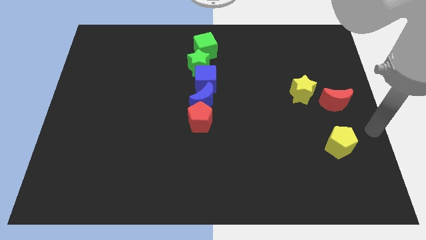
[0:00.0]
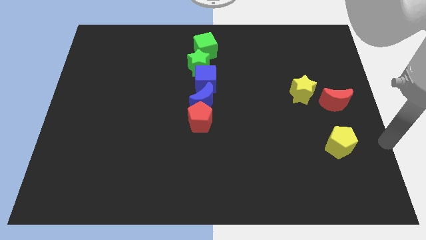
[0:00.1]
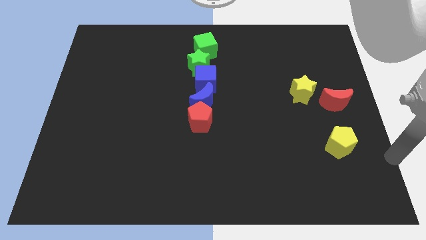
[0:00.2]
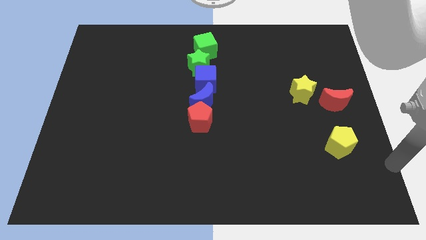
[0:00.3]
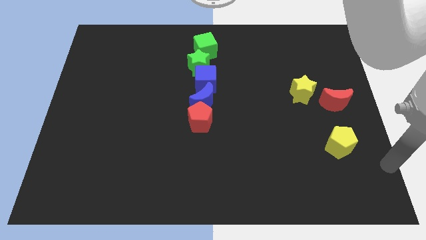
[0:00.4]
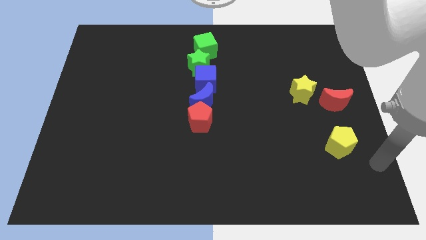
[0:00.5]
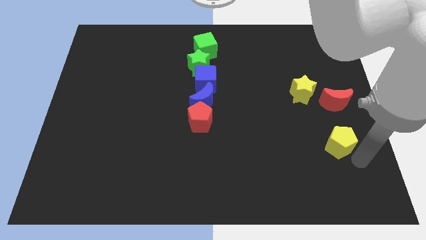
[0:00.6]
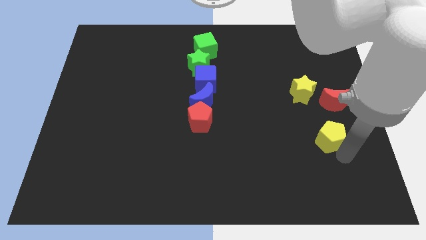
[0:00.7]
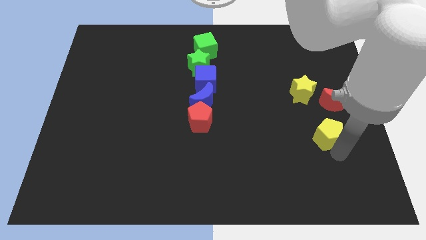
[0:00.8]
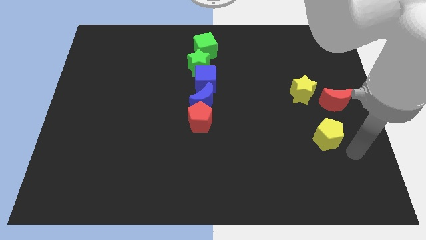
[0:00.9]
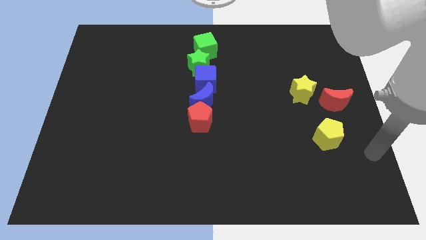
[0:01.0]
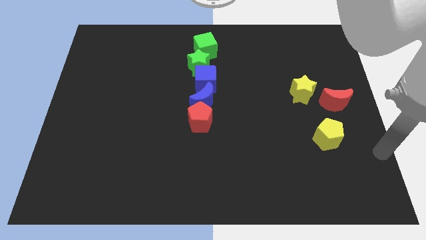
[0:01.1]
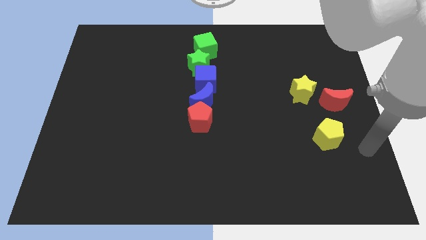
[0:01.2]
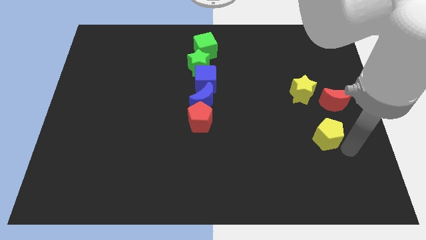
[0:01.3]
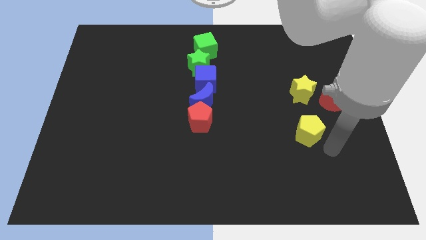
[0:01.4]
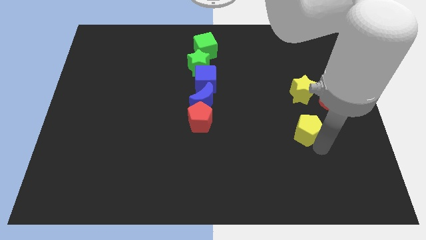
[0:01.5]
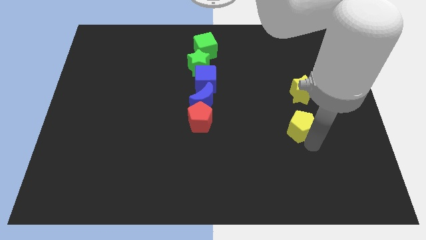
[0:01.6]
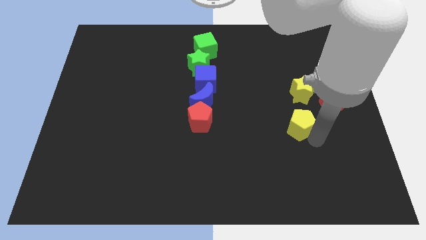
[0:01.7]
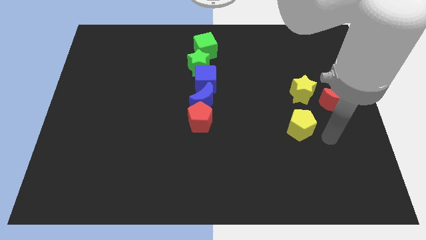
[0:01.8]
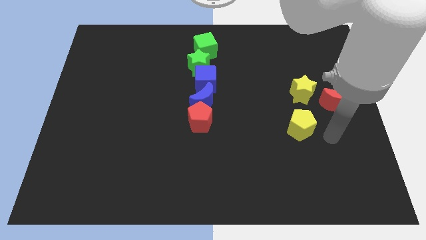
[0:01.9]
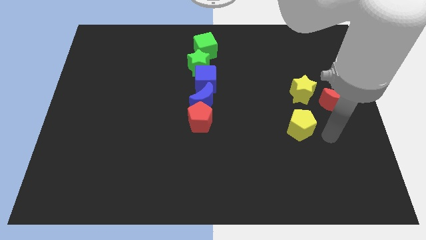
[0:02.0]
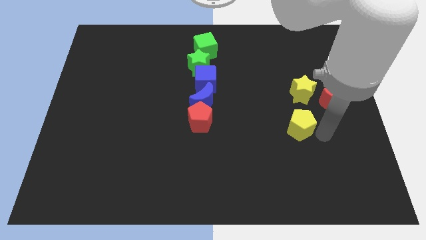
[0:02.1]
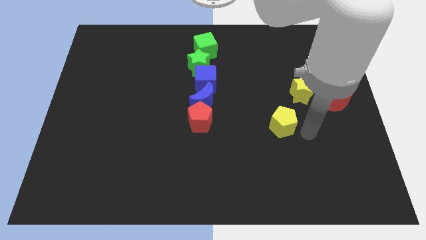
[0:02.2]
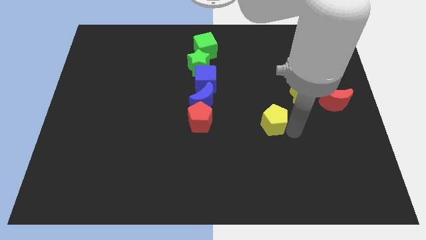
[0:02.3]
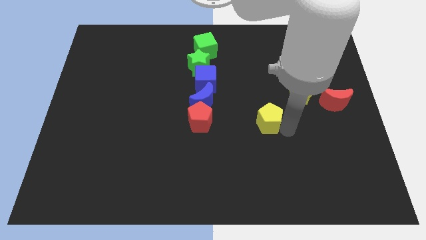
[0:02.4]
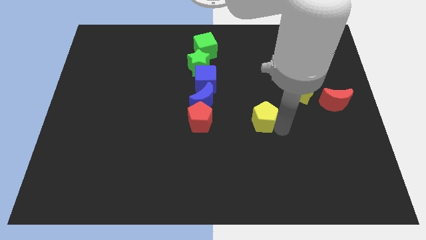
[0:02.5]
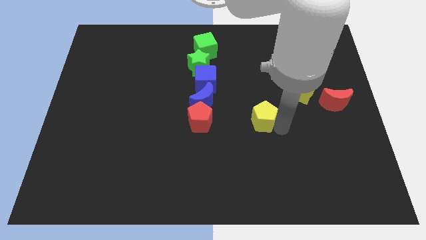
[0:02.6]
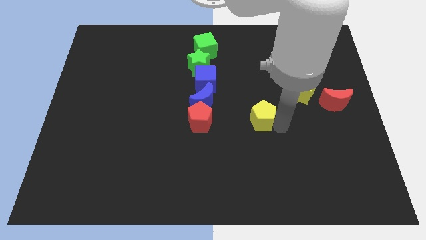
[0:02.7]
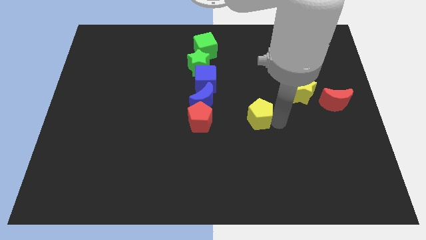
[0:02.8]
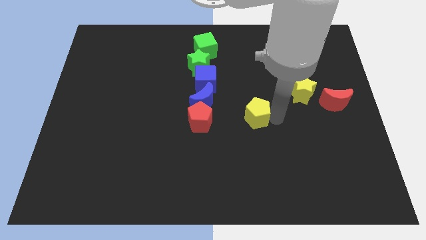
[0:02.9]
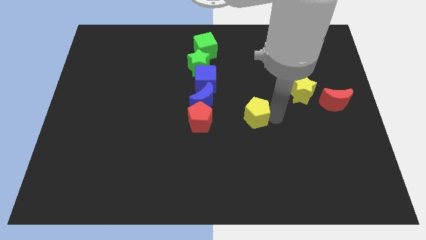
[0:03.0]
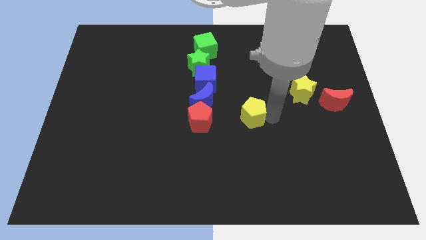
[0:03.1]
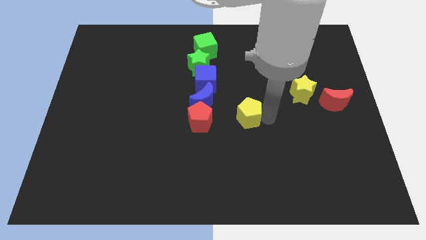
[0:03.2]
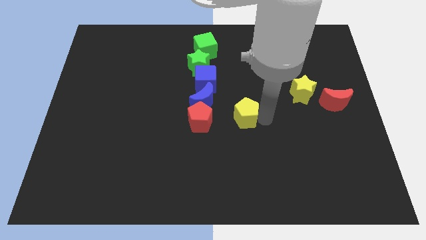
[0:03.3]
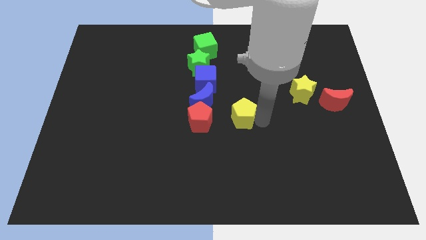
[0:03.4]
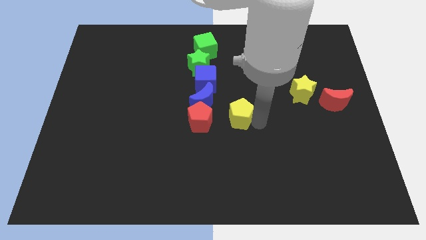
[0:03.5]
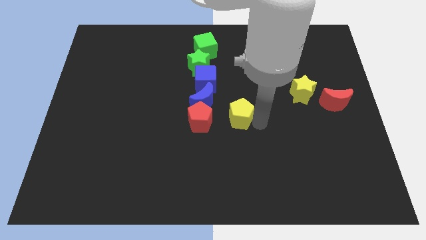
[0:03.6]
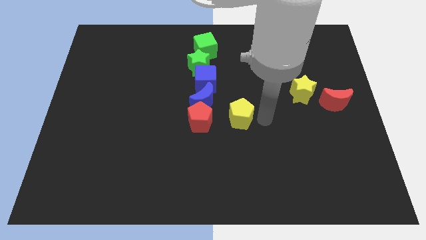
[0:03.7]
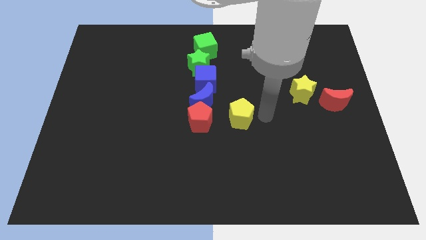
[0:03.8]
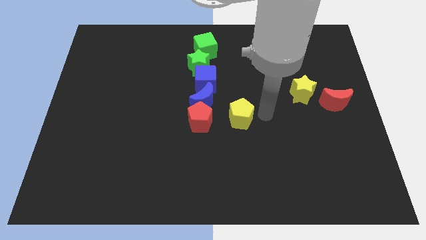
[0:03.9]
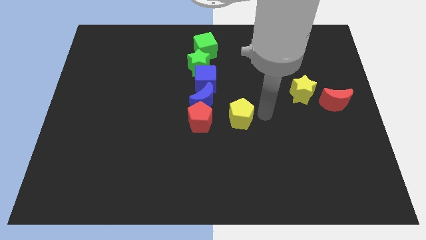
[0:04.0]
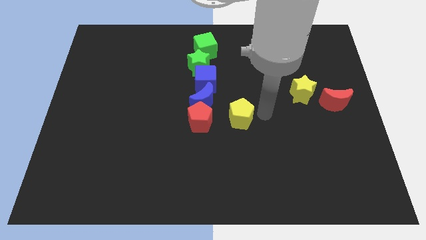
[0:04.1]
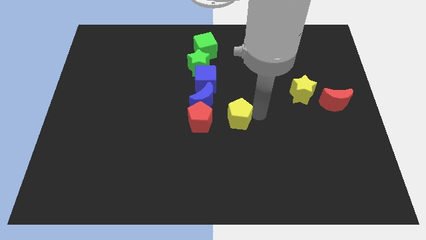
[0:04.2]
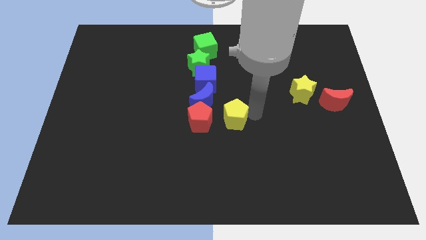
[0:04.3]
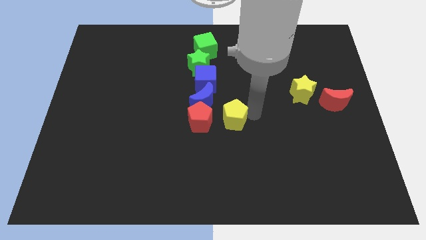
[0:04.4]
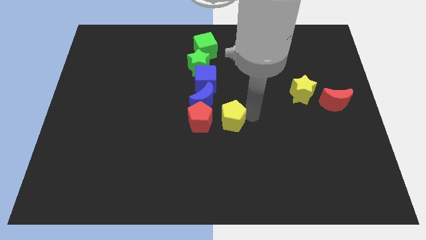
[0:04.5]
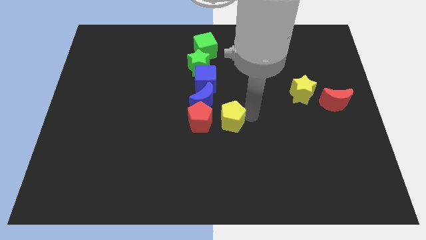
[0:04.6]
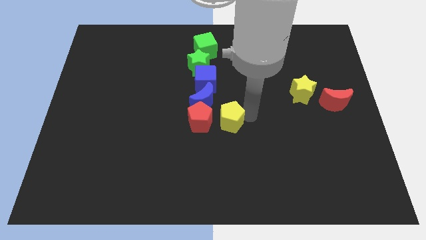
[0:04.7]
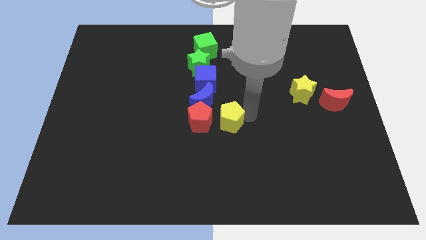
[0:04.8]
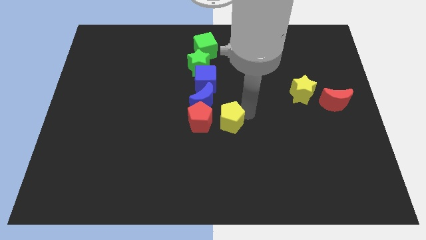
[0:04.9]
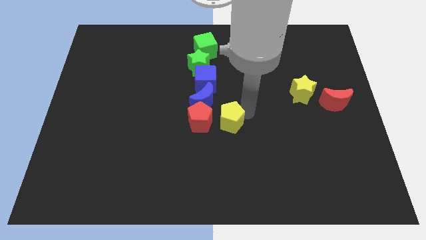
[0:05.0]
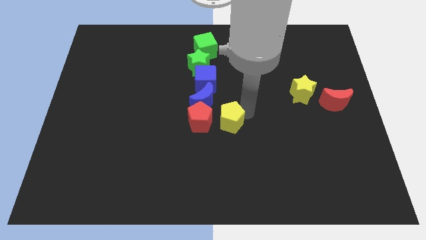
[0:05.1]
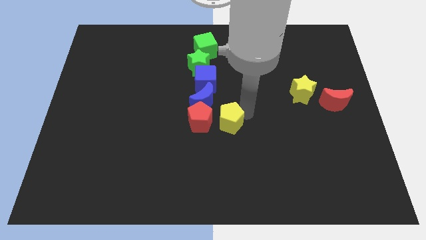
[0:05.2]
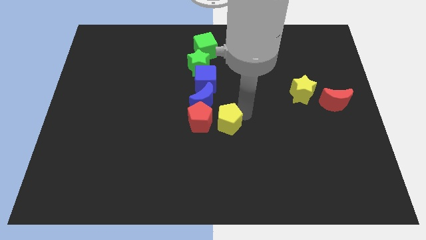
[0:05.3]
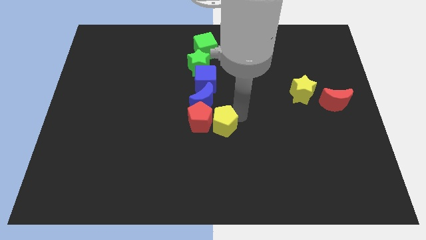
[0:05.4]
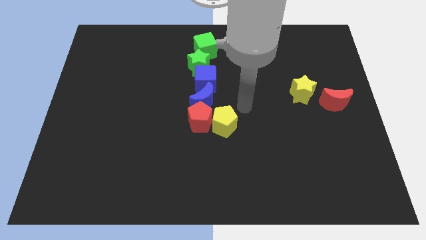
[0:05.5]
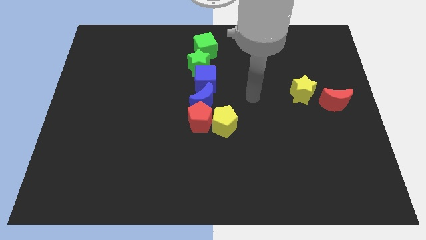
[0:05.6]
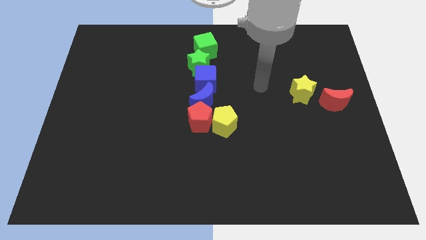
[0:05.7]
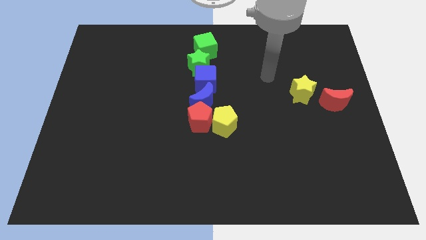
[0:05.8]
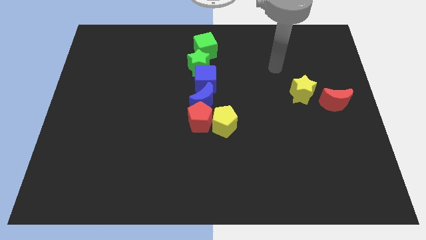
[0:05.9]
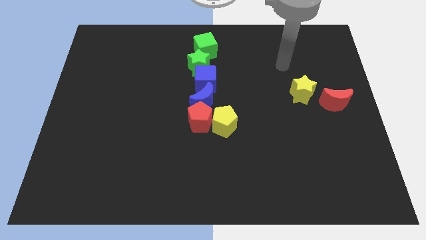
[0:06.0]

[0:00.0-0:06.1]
place the yellow pentagon to the right side of the red pentagon

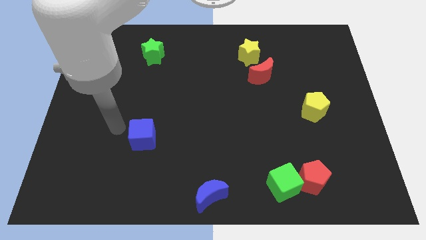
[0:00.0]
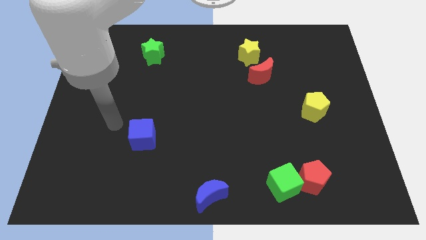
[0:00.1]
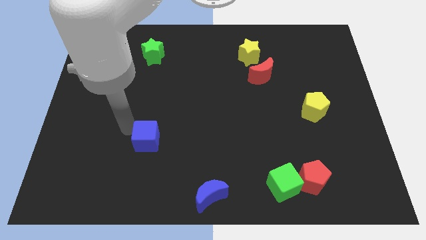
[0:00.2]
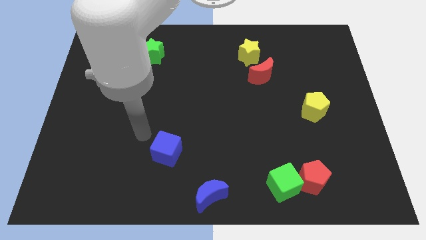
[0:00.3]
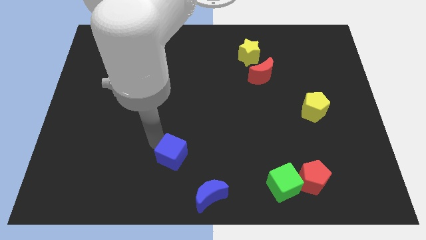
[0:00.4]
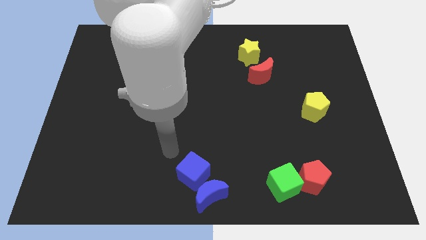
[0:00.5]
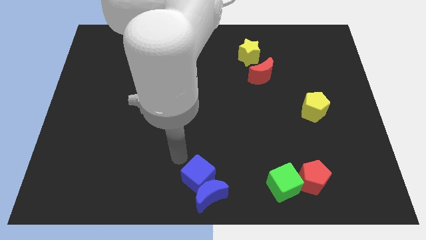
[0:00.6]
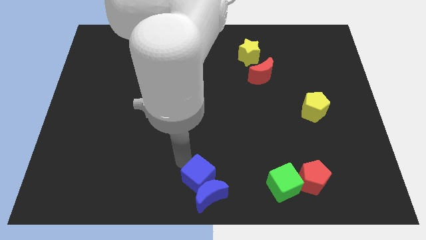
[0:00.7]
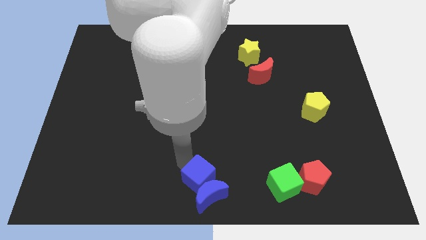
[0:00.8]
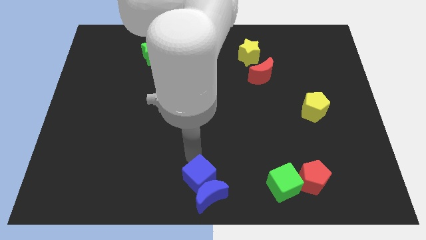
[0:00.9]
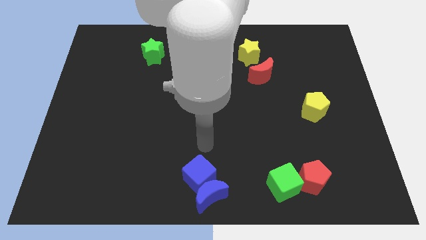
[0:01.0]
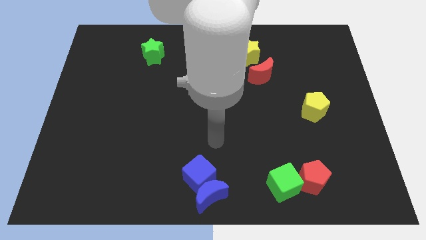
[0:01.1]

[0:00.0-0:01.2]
place the blue cube above the blue crescent

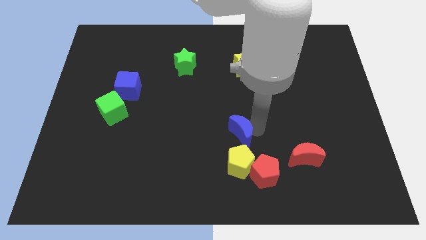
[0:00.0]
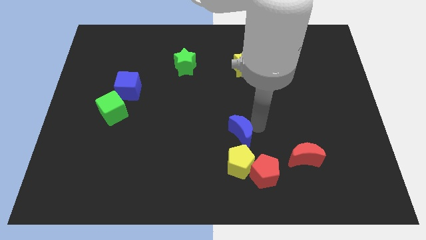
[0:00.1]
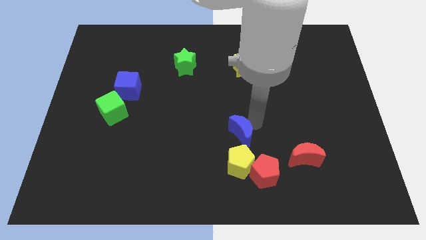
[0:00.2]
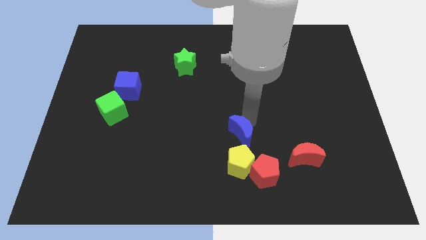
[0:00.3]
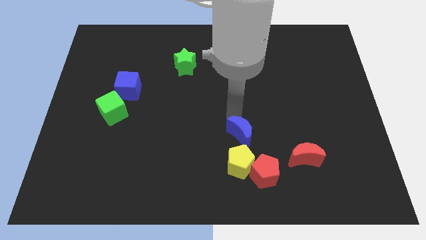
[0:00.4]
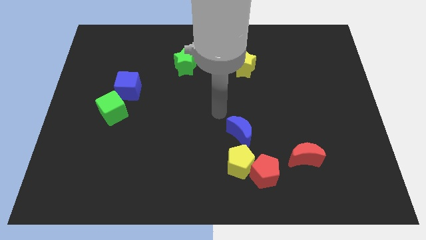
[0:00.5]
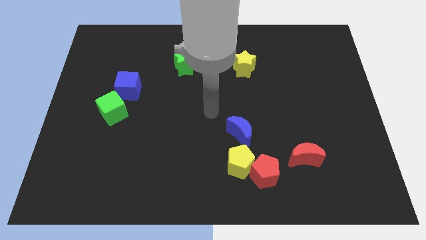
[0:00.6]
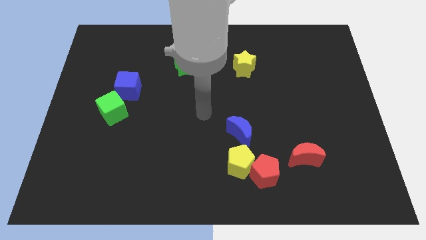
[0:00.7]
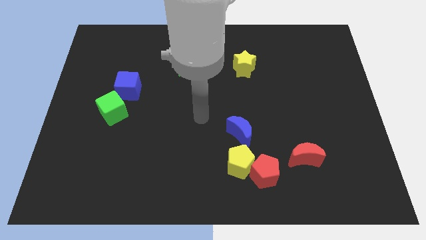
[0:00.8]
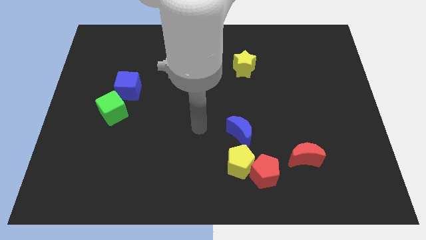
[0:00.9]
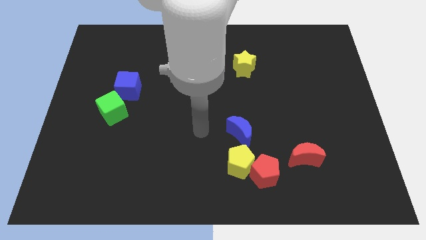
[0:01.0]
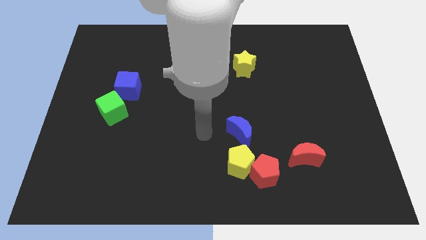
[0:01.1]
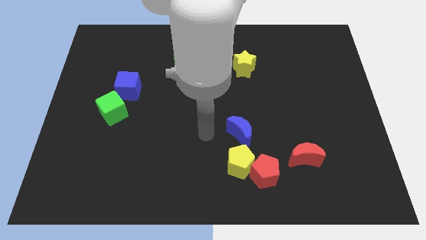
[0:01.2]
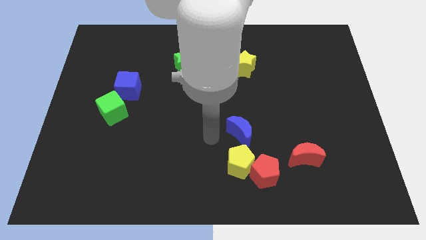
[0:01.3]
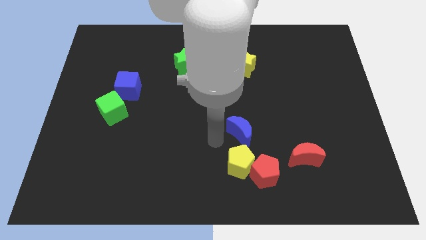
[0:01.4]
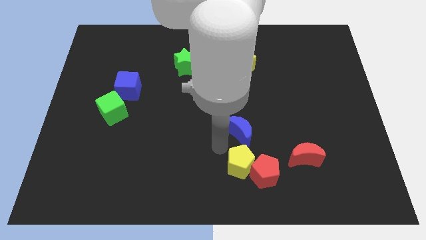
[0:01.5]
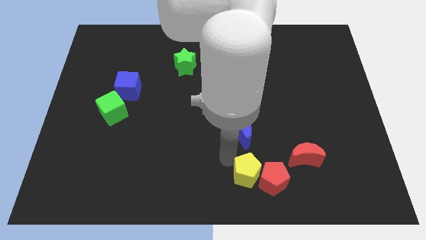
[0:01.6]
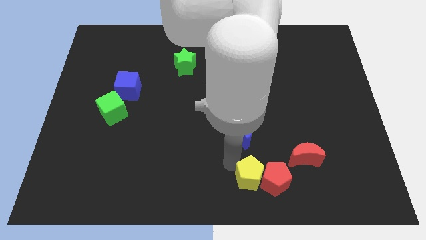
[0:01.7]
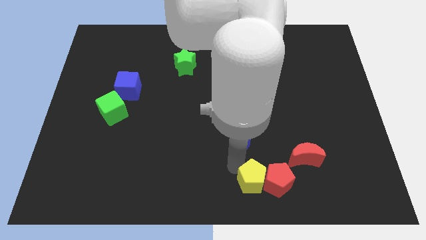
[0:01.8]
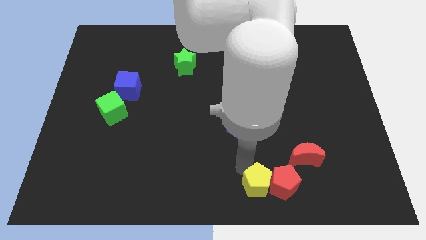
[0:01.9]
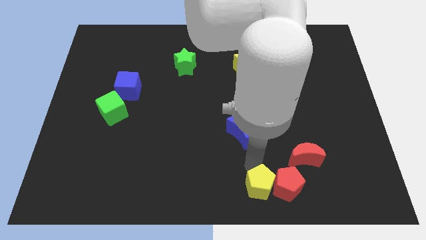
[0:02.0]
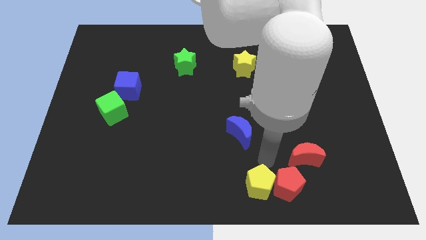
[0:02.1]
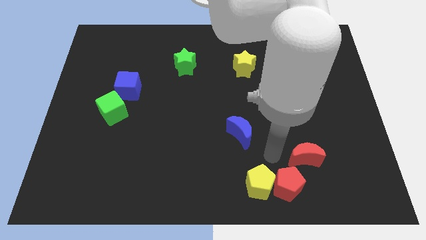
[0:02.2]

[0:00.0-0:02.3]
push the group of pentagons away from the blue crescent
